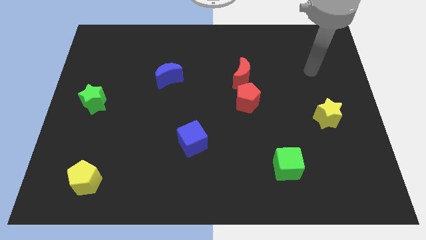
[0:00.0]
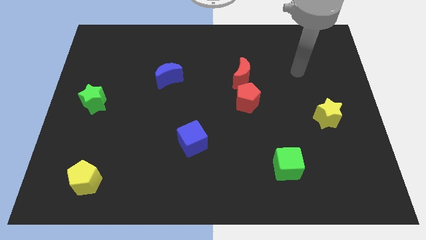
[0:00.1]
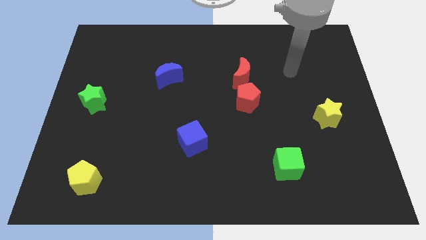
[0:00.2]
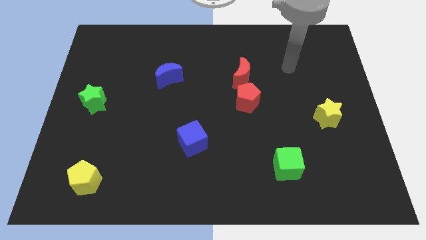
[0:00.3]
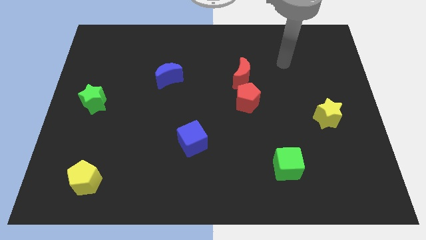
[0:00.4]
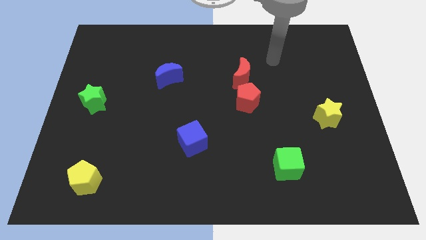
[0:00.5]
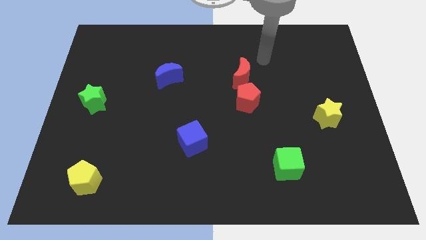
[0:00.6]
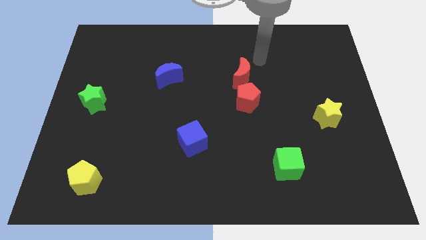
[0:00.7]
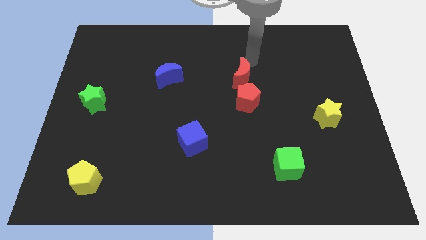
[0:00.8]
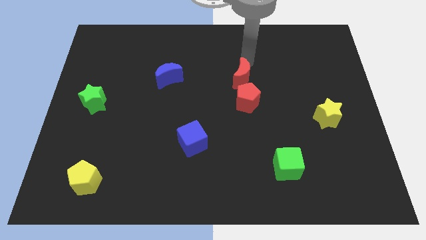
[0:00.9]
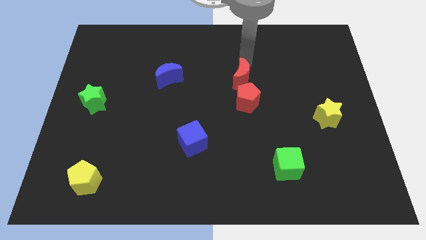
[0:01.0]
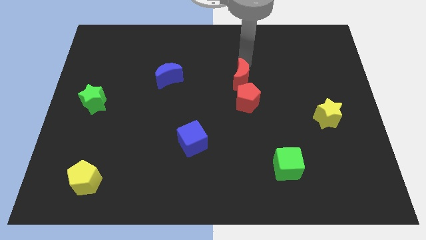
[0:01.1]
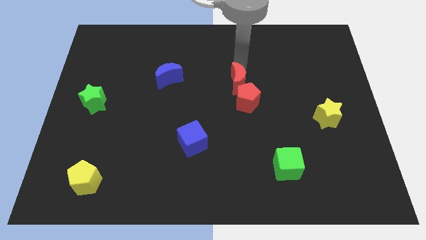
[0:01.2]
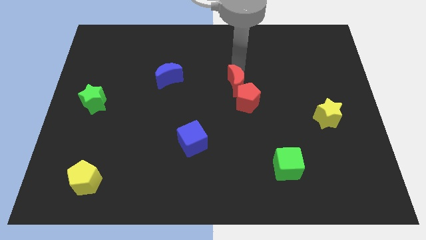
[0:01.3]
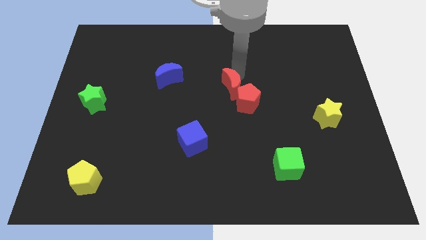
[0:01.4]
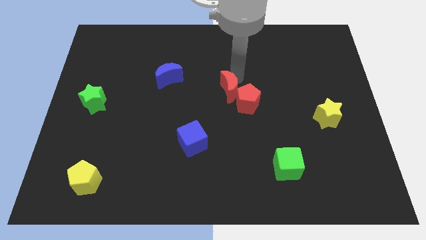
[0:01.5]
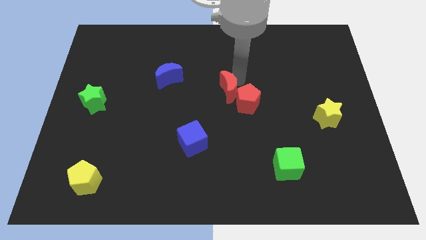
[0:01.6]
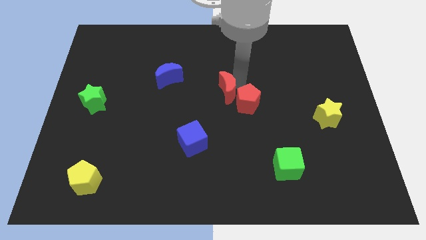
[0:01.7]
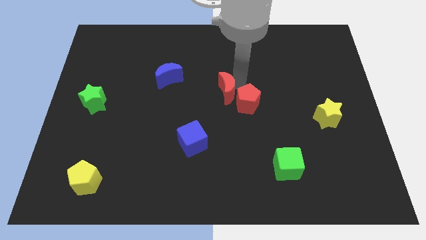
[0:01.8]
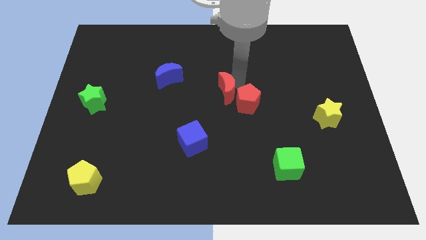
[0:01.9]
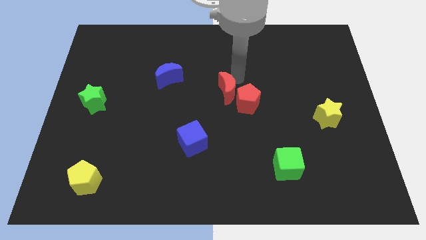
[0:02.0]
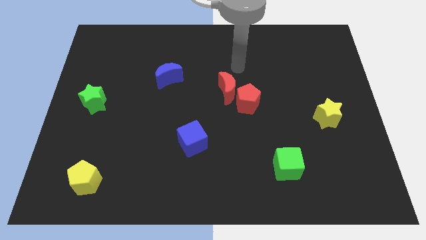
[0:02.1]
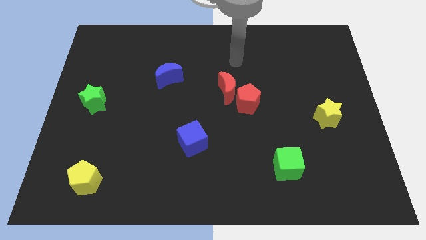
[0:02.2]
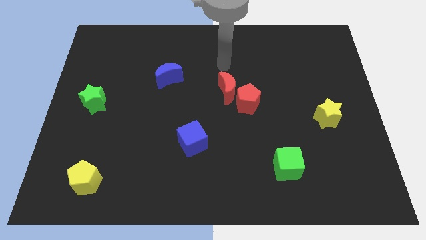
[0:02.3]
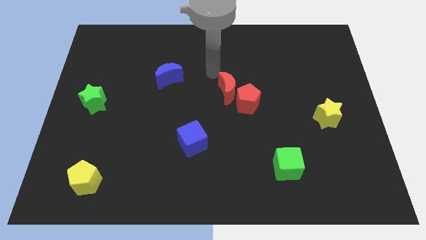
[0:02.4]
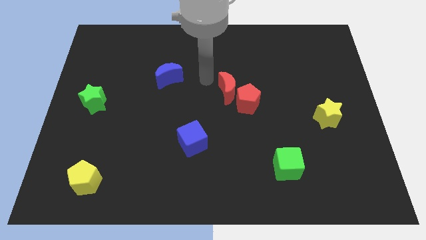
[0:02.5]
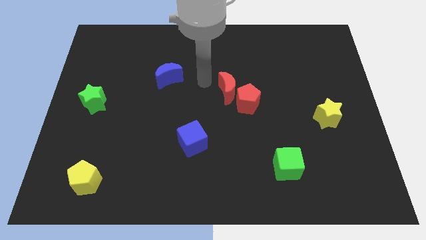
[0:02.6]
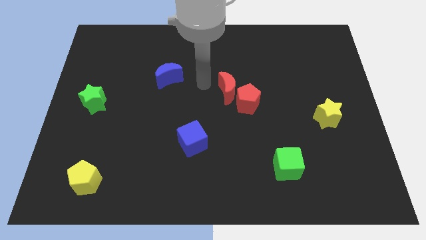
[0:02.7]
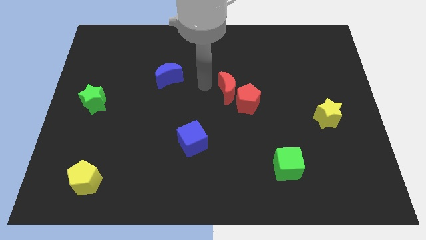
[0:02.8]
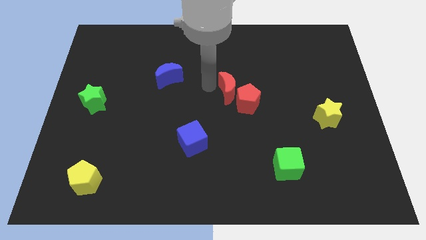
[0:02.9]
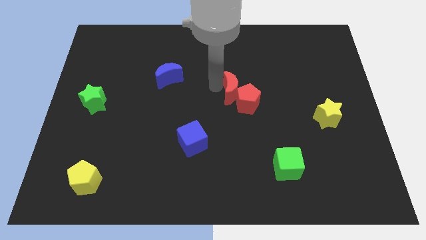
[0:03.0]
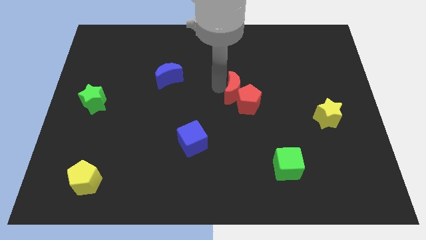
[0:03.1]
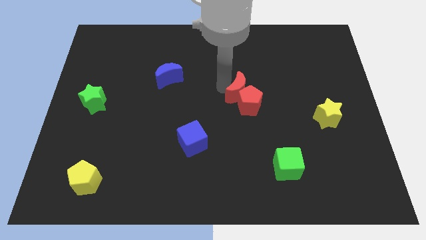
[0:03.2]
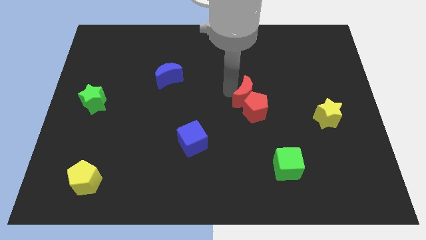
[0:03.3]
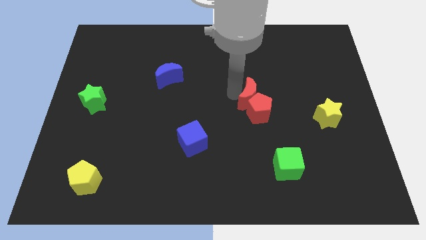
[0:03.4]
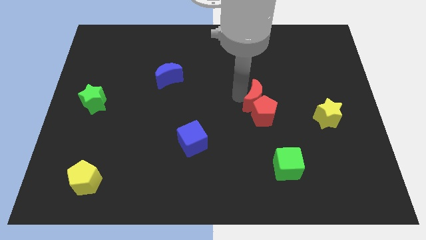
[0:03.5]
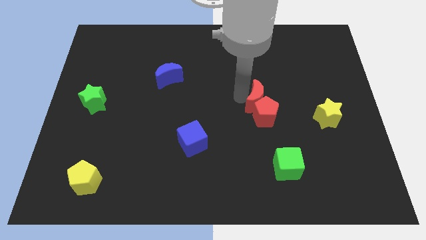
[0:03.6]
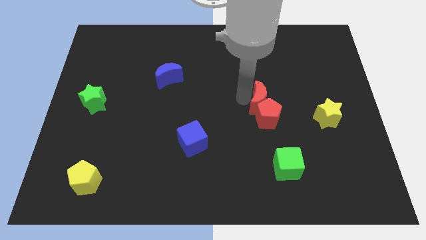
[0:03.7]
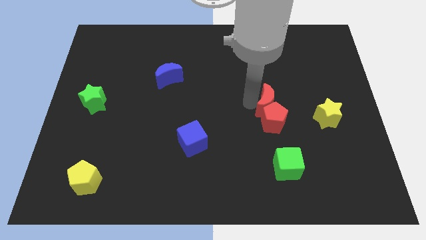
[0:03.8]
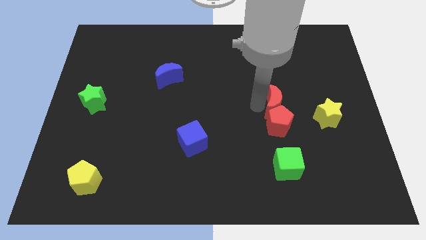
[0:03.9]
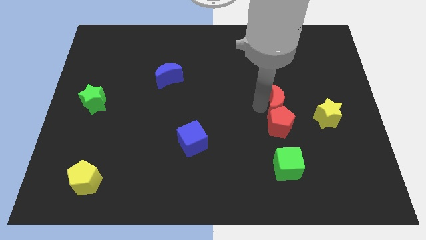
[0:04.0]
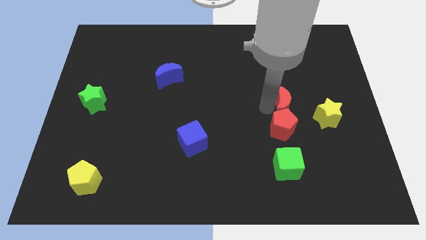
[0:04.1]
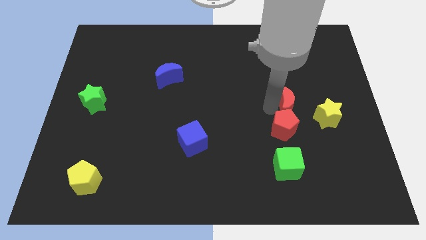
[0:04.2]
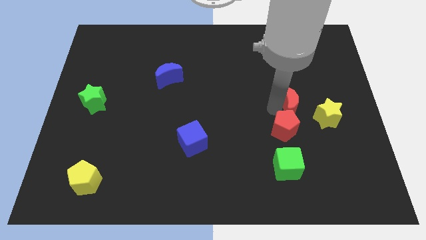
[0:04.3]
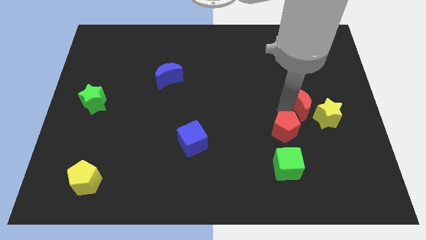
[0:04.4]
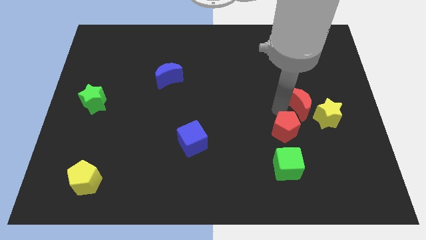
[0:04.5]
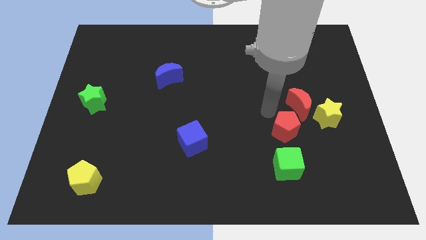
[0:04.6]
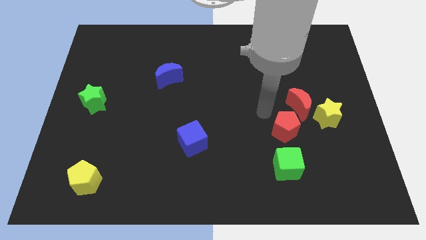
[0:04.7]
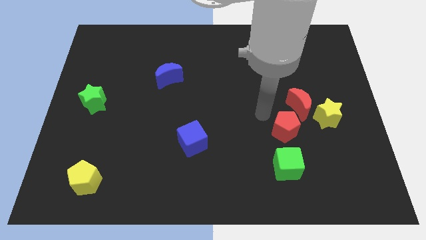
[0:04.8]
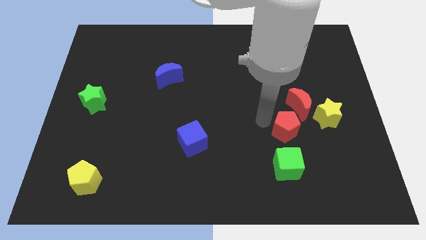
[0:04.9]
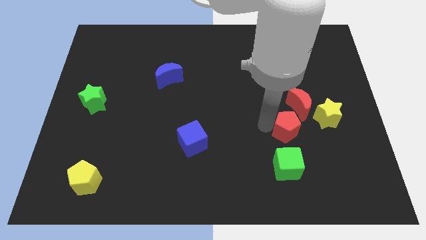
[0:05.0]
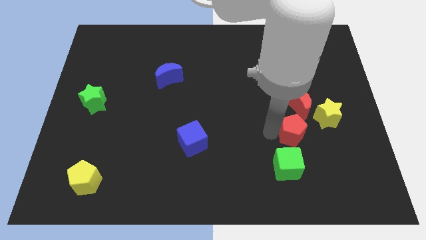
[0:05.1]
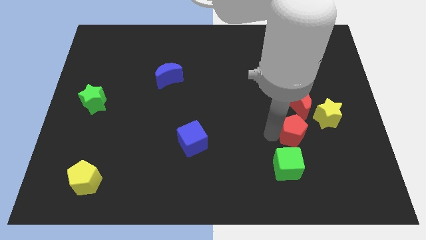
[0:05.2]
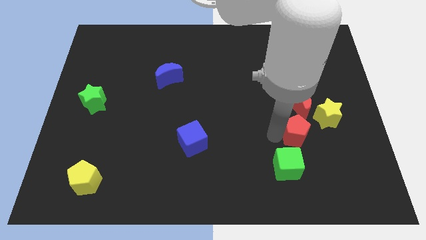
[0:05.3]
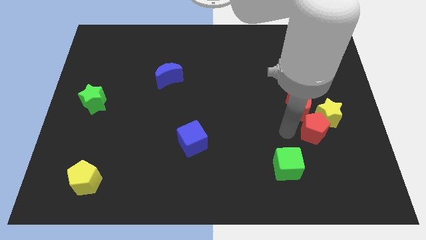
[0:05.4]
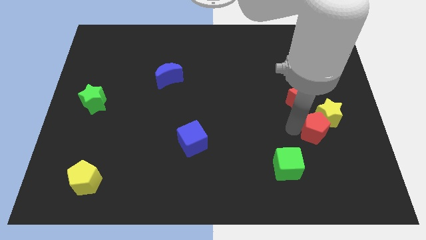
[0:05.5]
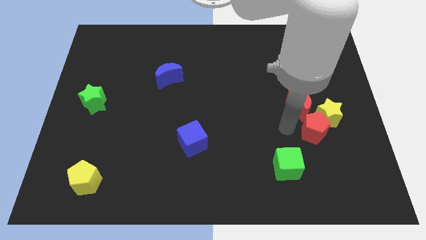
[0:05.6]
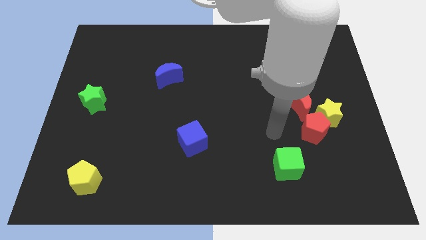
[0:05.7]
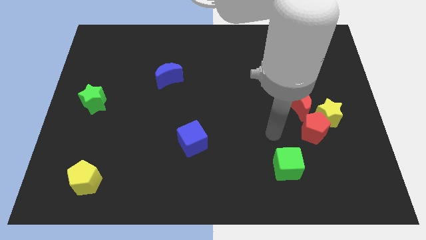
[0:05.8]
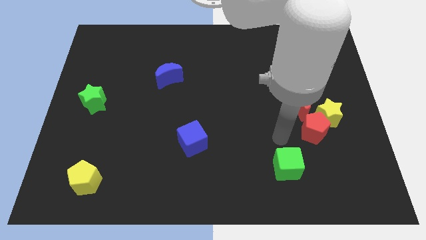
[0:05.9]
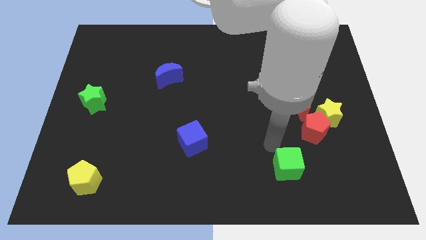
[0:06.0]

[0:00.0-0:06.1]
move the red moon and red pentagon beside the yellow star

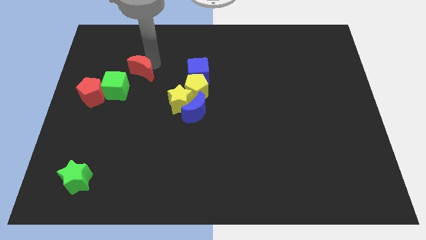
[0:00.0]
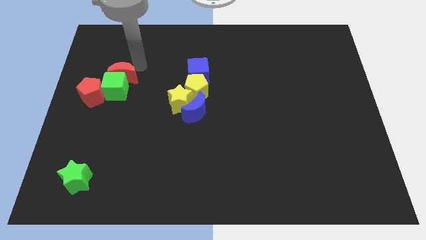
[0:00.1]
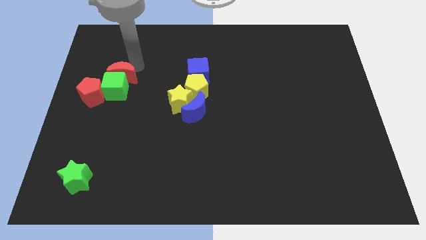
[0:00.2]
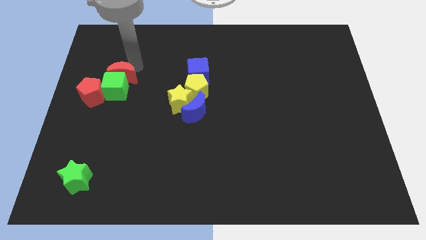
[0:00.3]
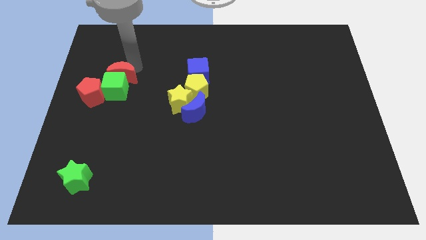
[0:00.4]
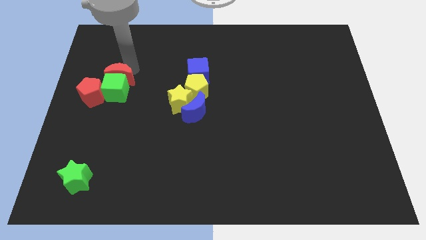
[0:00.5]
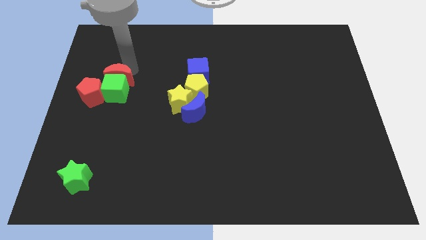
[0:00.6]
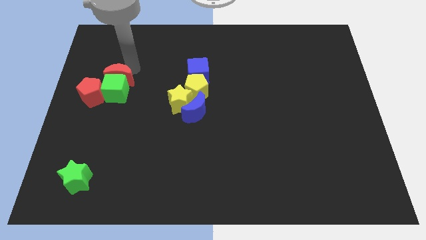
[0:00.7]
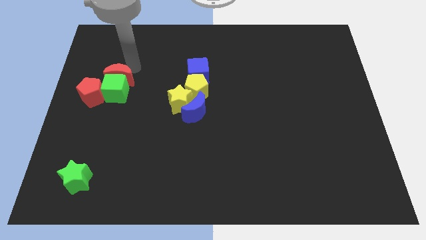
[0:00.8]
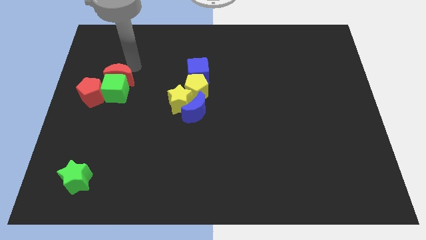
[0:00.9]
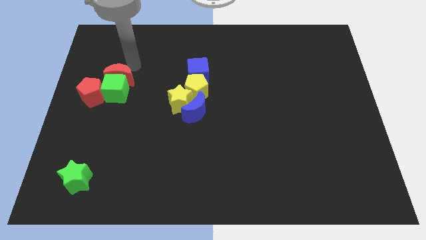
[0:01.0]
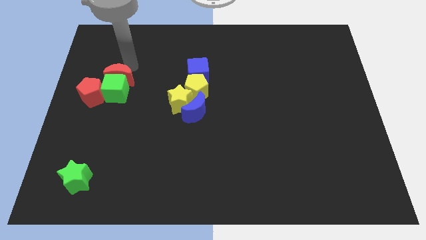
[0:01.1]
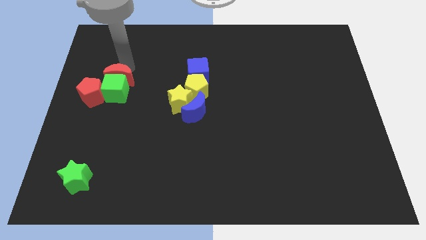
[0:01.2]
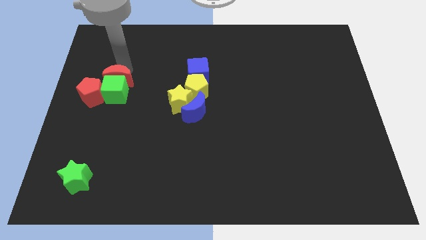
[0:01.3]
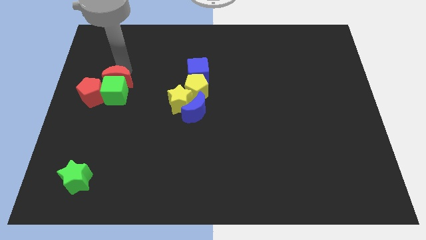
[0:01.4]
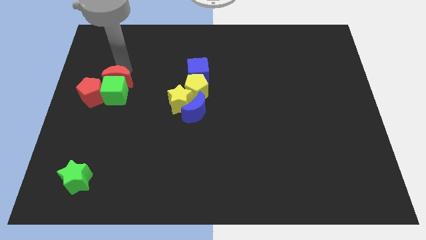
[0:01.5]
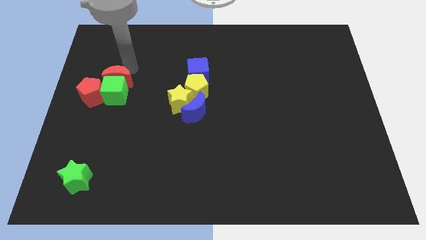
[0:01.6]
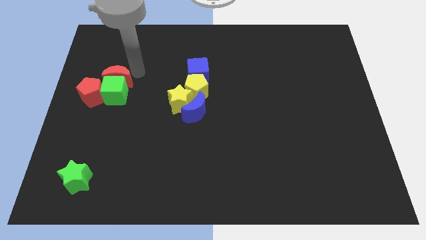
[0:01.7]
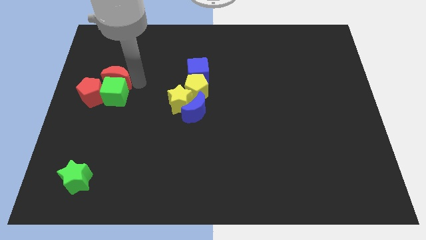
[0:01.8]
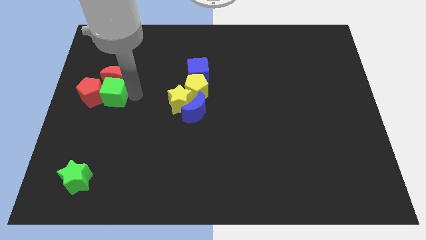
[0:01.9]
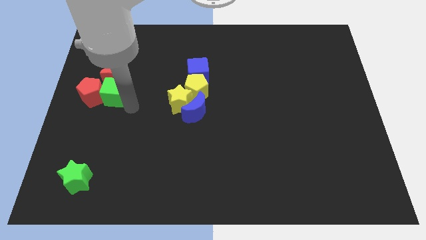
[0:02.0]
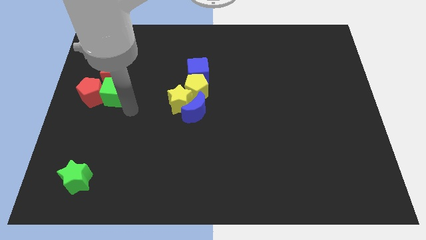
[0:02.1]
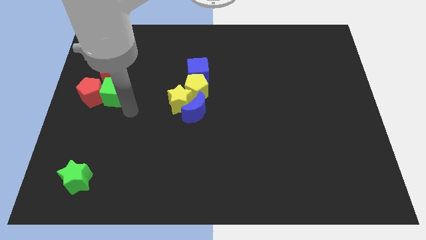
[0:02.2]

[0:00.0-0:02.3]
put the red moon above the green cube

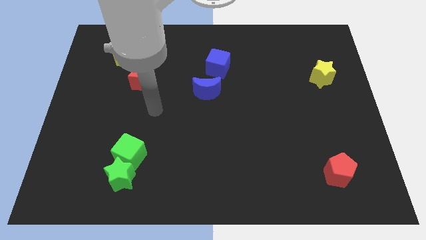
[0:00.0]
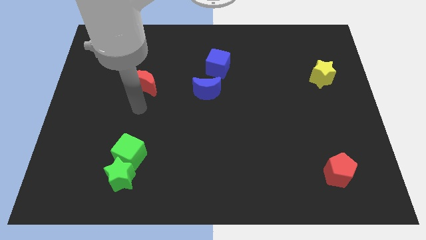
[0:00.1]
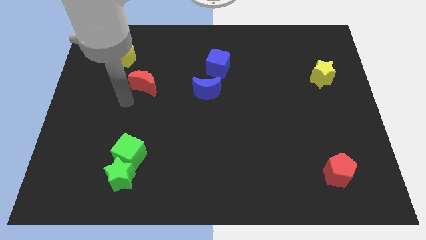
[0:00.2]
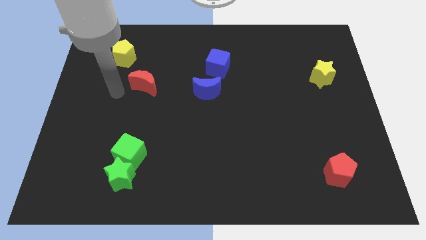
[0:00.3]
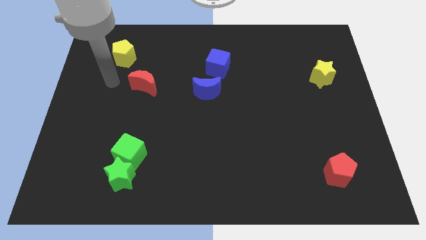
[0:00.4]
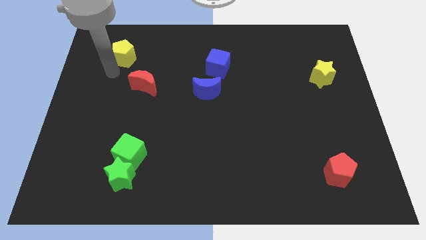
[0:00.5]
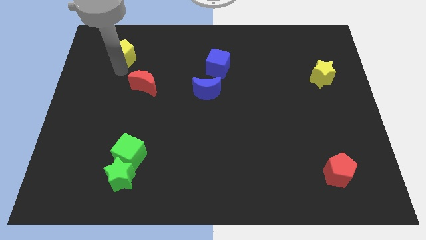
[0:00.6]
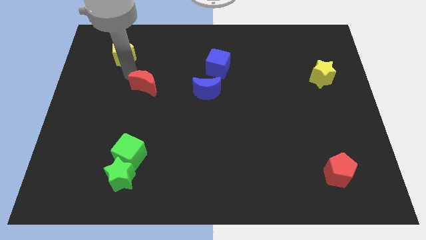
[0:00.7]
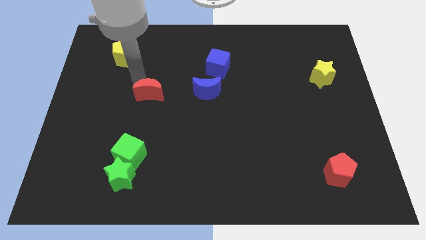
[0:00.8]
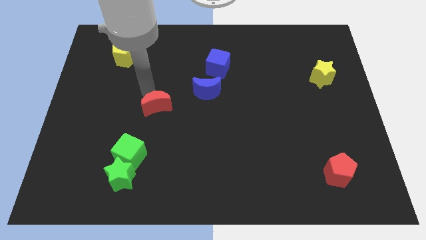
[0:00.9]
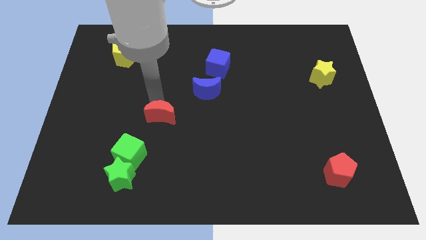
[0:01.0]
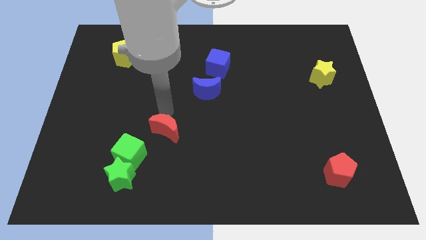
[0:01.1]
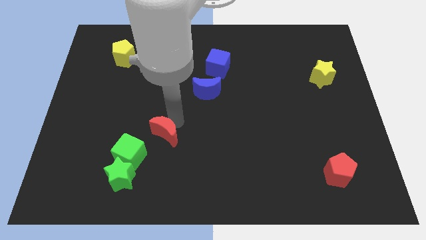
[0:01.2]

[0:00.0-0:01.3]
place the red moon diagonally to blue moon
